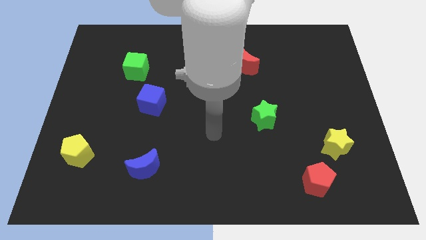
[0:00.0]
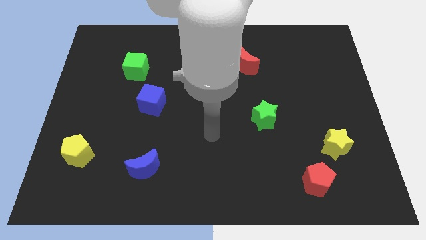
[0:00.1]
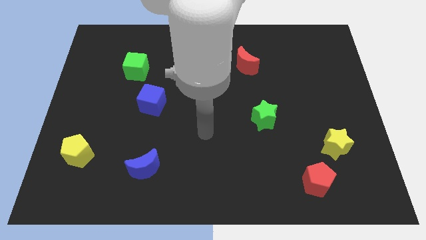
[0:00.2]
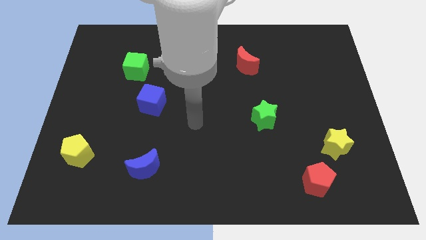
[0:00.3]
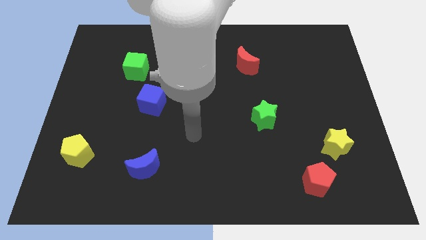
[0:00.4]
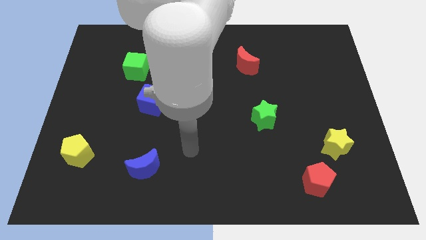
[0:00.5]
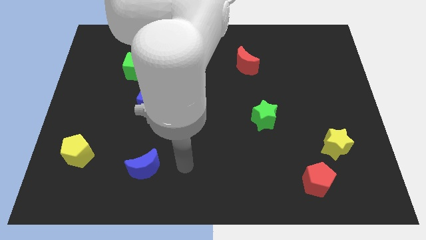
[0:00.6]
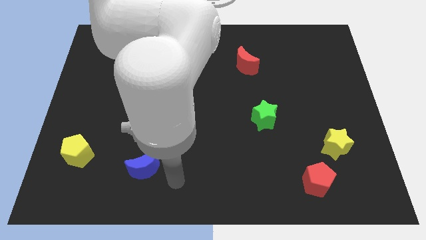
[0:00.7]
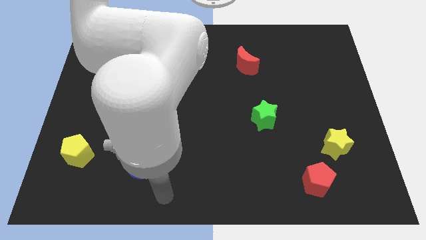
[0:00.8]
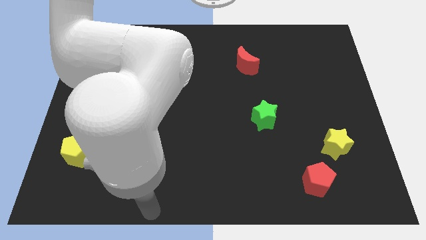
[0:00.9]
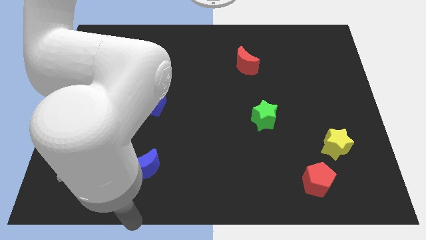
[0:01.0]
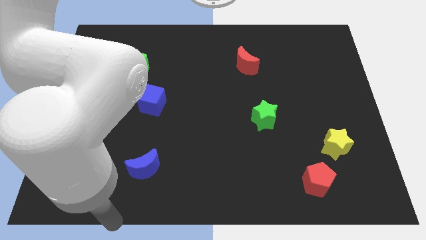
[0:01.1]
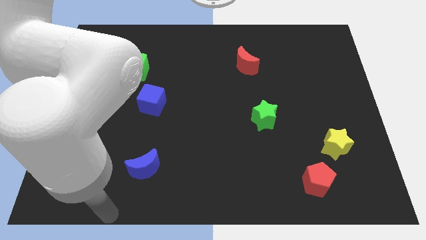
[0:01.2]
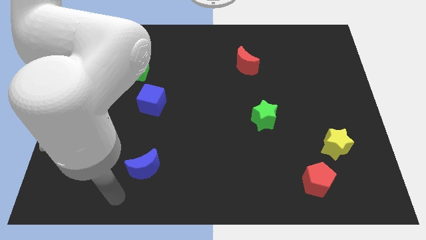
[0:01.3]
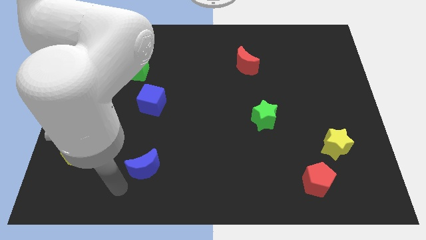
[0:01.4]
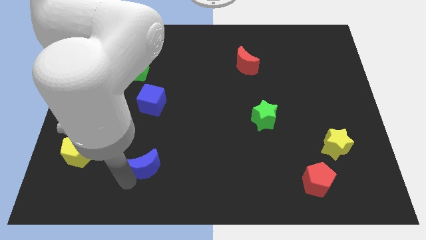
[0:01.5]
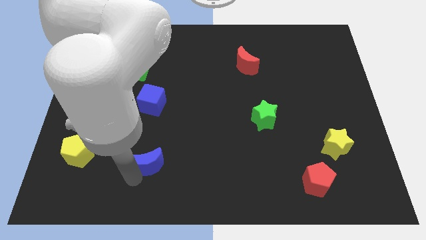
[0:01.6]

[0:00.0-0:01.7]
tap the bottom of blue crescent

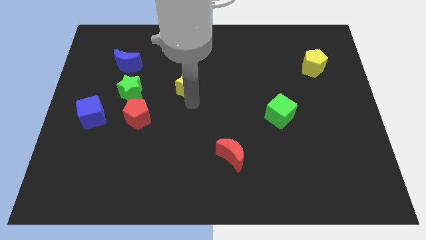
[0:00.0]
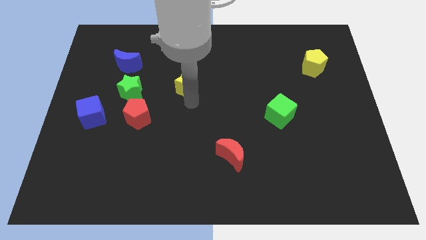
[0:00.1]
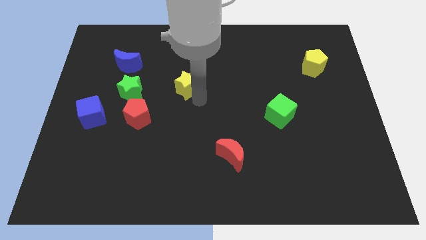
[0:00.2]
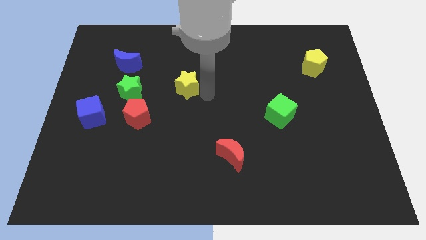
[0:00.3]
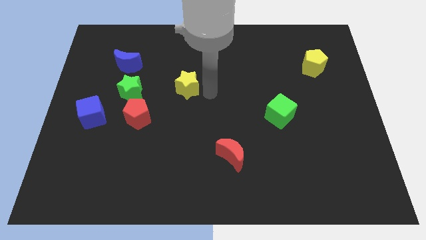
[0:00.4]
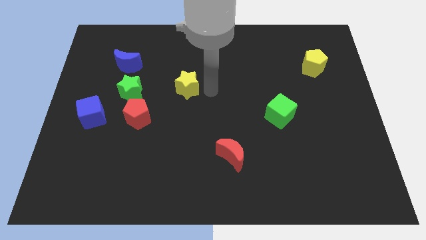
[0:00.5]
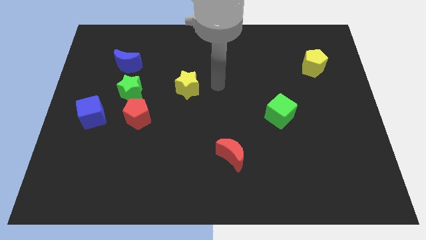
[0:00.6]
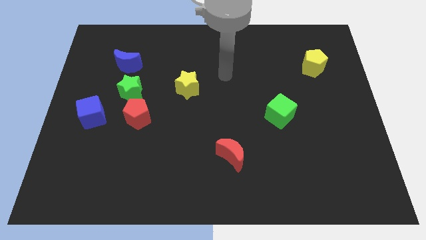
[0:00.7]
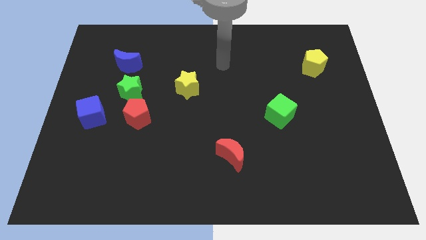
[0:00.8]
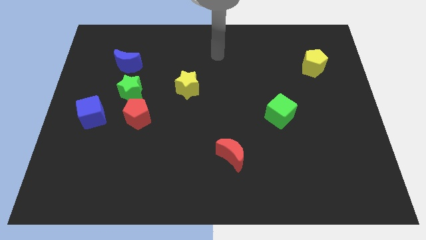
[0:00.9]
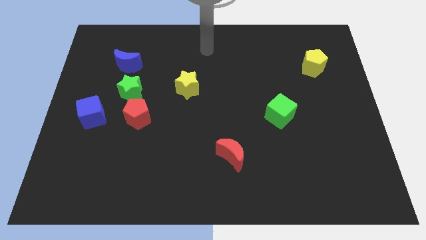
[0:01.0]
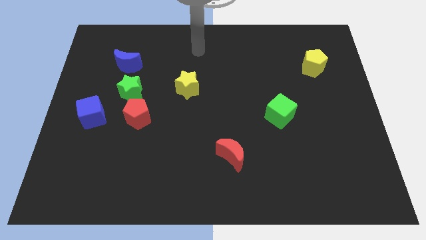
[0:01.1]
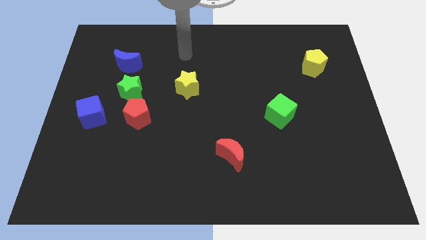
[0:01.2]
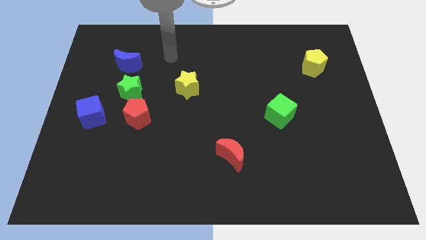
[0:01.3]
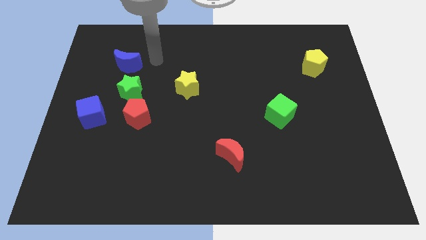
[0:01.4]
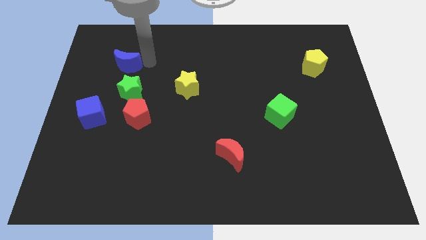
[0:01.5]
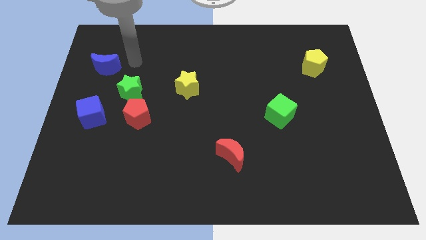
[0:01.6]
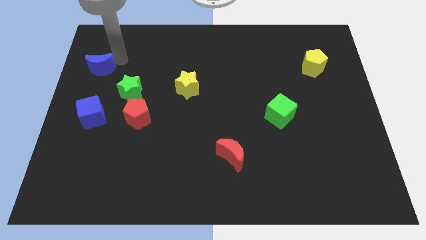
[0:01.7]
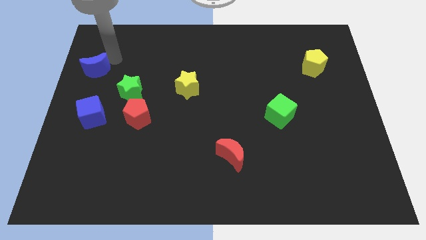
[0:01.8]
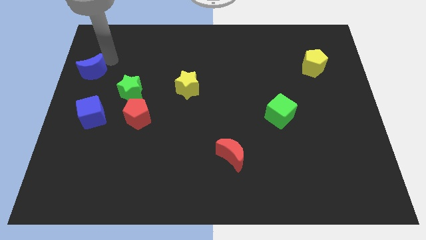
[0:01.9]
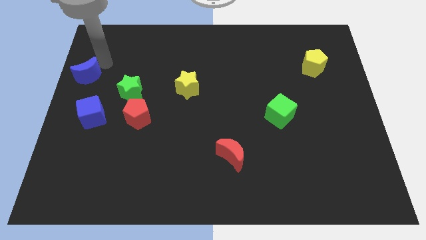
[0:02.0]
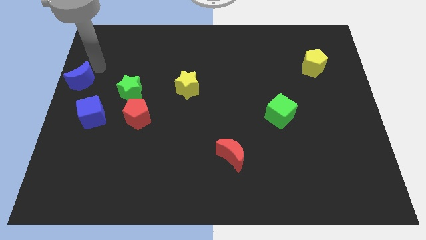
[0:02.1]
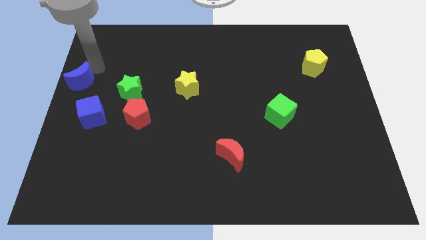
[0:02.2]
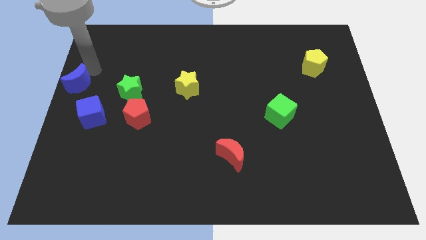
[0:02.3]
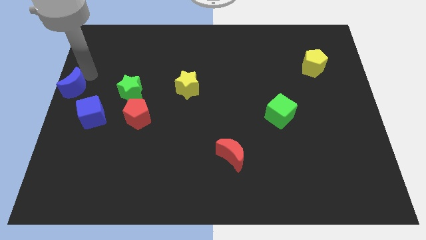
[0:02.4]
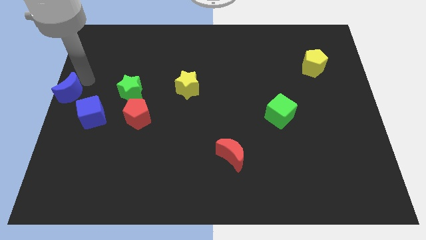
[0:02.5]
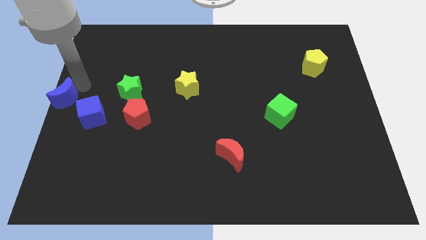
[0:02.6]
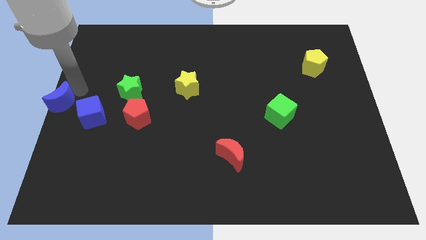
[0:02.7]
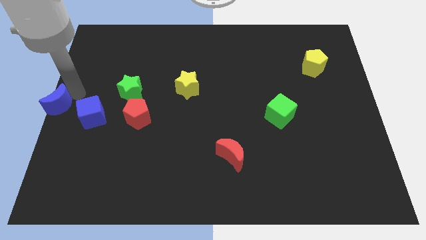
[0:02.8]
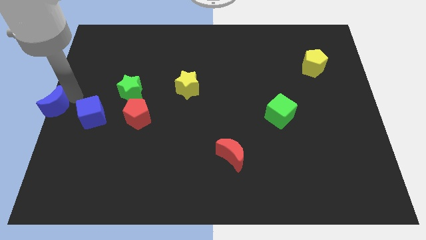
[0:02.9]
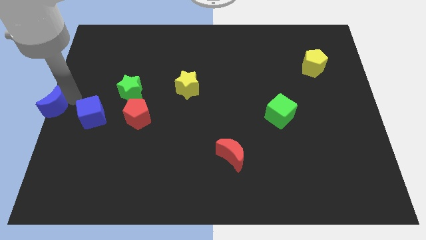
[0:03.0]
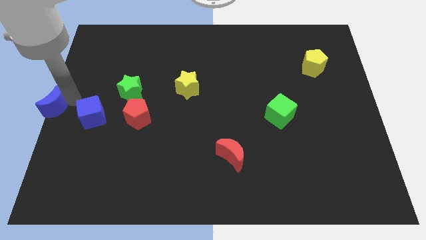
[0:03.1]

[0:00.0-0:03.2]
slide the blue moon towards the center left of the board

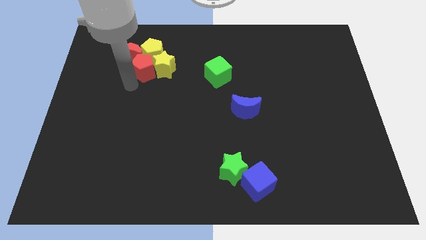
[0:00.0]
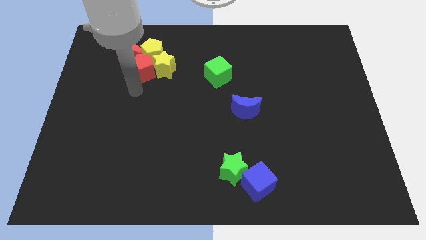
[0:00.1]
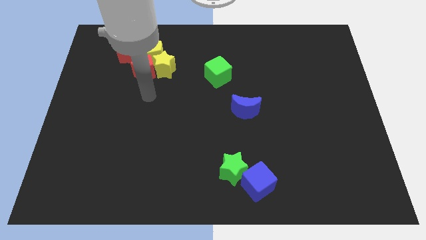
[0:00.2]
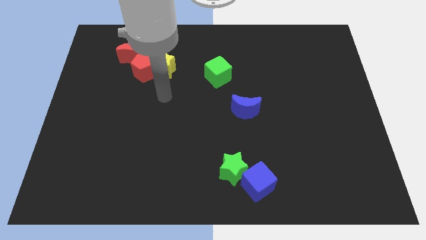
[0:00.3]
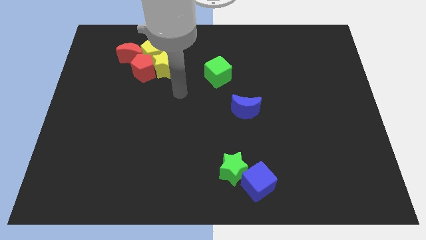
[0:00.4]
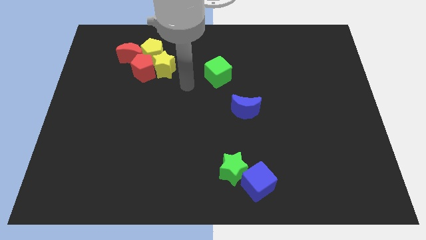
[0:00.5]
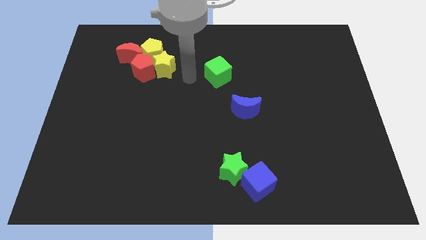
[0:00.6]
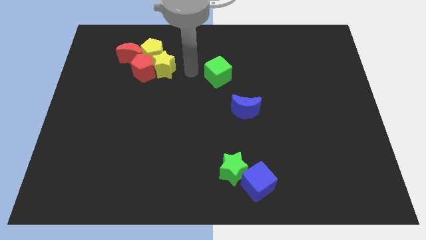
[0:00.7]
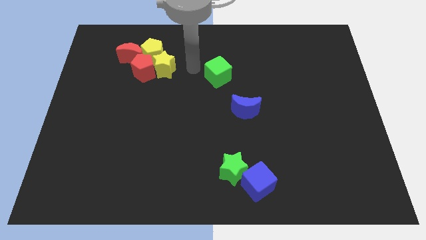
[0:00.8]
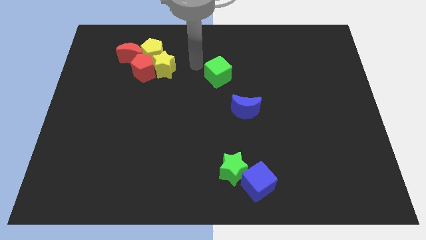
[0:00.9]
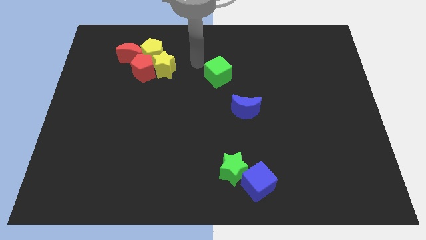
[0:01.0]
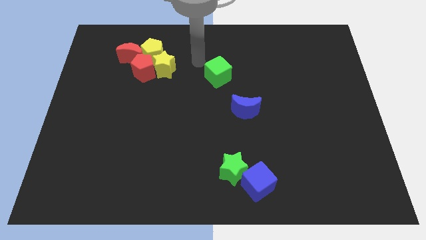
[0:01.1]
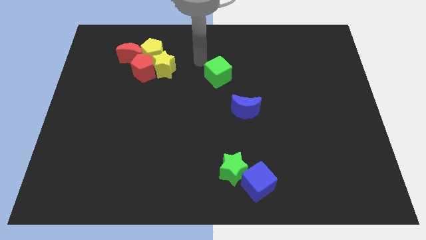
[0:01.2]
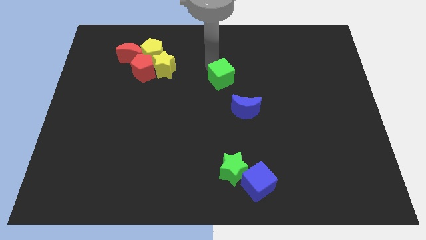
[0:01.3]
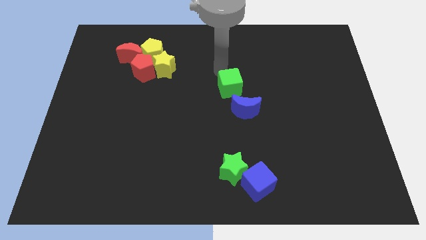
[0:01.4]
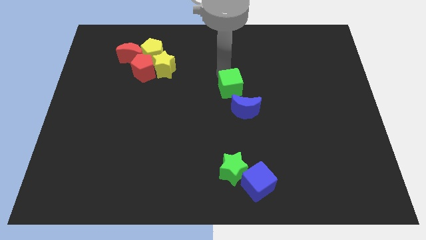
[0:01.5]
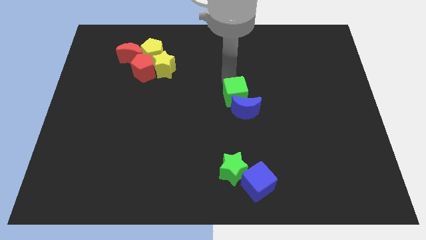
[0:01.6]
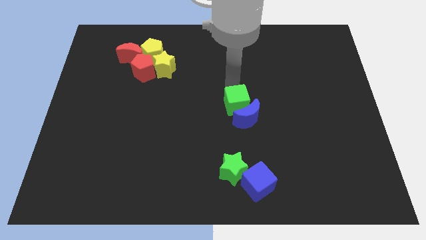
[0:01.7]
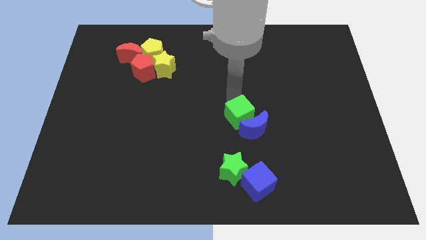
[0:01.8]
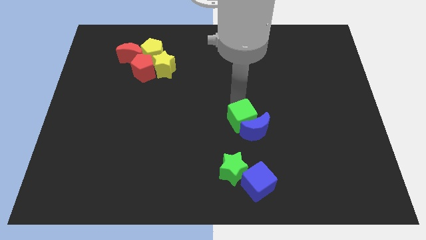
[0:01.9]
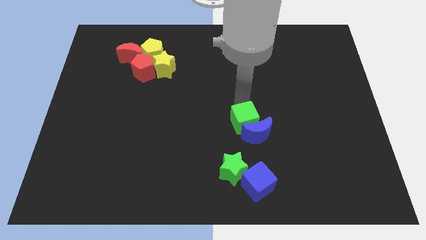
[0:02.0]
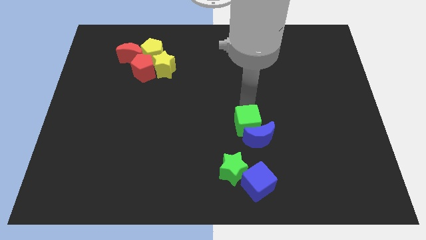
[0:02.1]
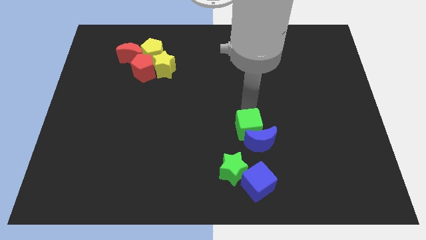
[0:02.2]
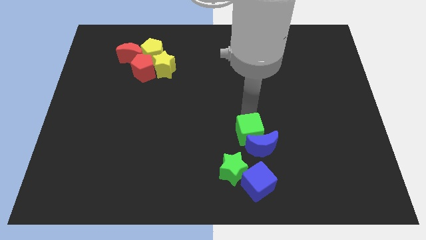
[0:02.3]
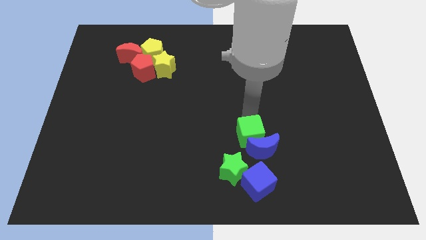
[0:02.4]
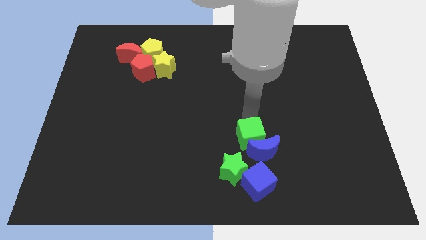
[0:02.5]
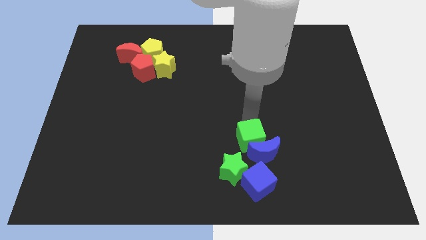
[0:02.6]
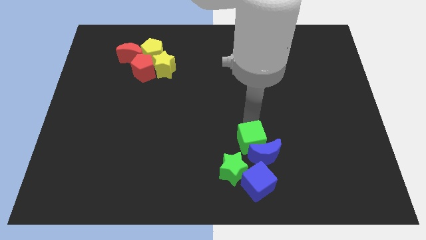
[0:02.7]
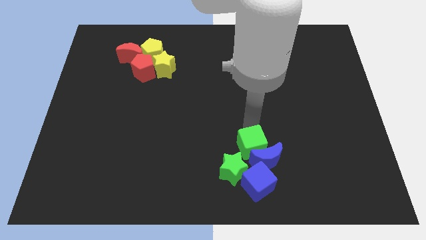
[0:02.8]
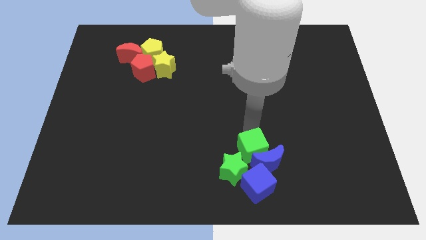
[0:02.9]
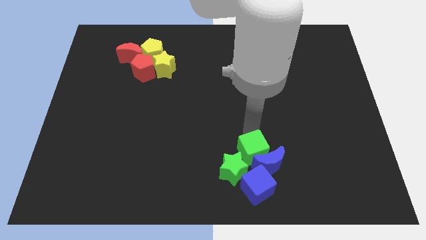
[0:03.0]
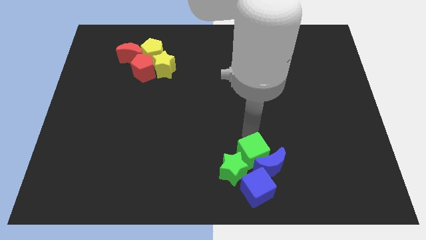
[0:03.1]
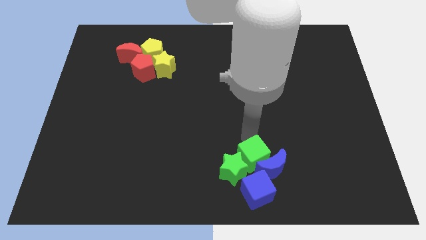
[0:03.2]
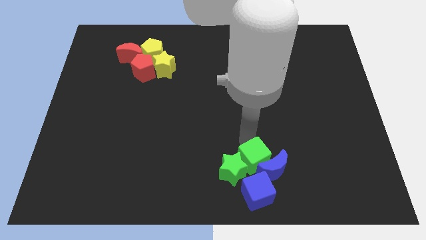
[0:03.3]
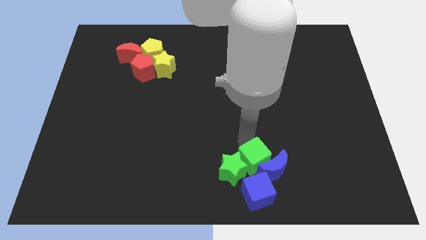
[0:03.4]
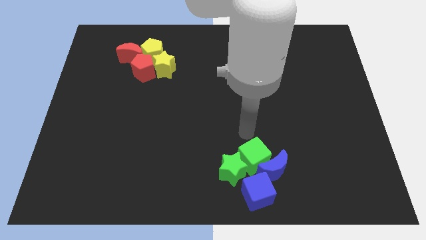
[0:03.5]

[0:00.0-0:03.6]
move the green cube and along with the blue crescent to the top of the green star and the blue cube

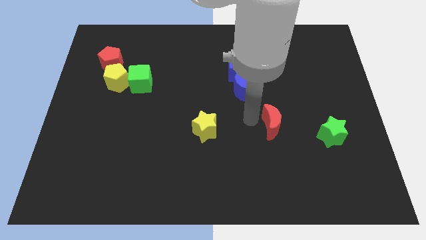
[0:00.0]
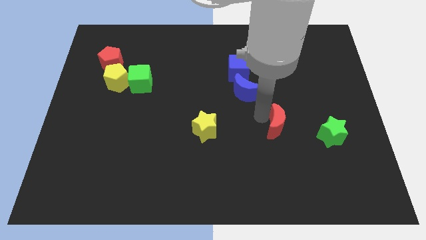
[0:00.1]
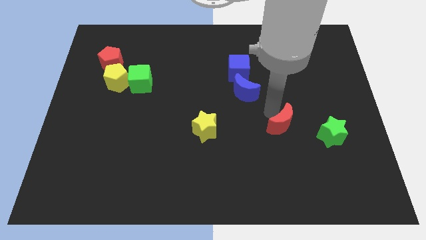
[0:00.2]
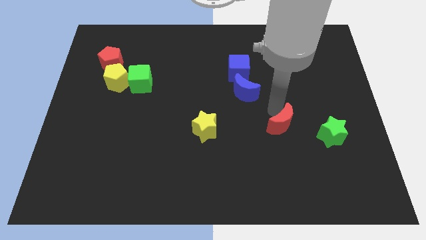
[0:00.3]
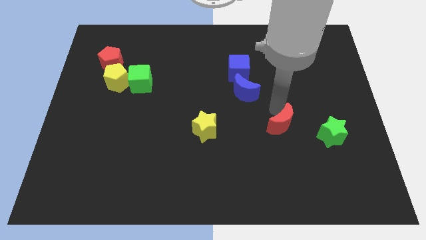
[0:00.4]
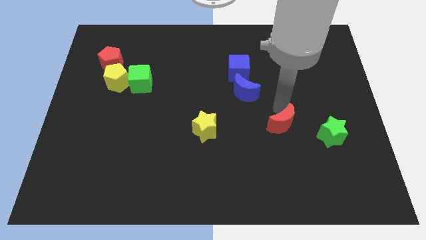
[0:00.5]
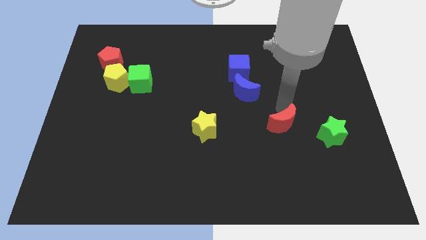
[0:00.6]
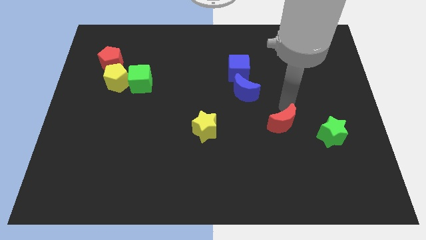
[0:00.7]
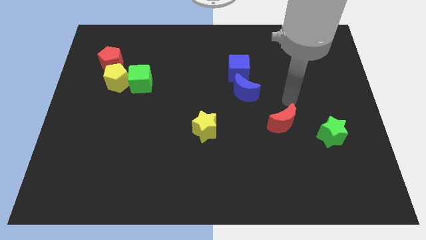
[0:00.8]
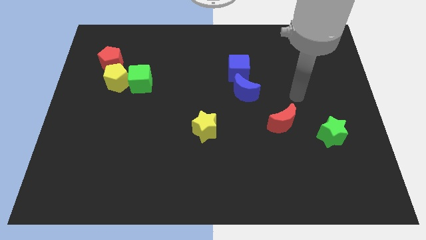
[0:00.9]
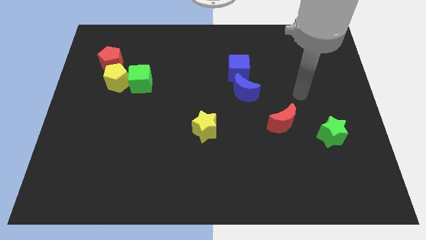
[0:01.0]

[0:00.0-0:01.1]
move the red crescent slightly
